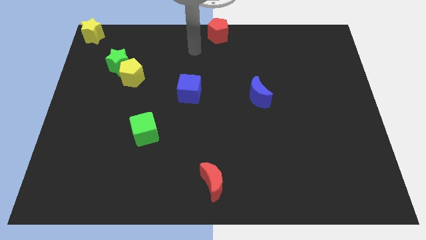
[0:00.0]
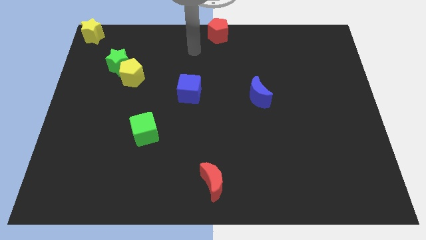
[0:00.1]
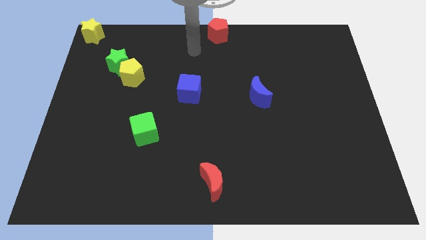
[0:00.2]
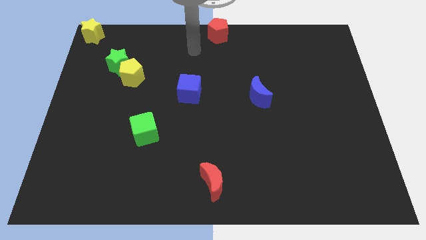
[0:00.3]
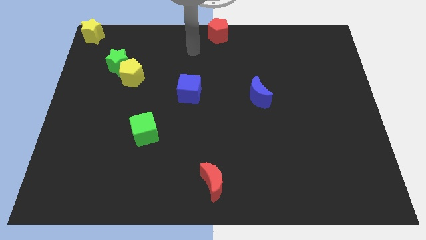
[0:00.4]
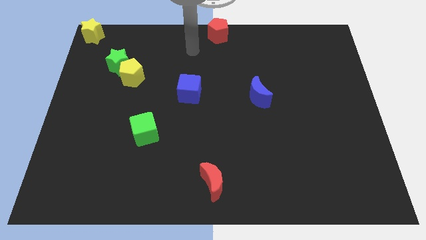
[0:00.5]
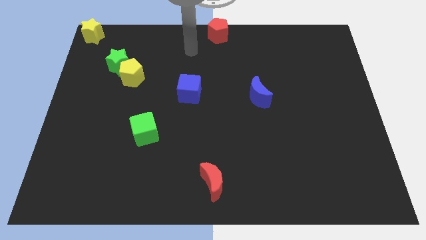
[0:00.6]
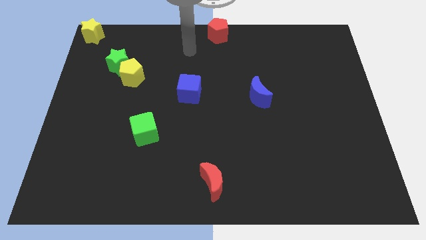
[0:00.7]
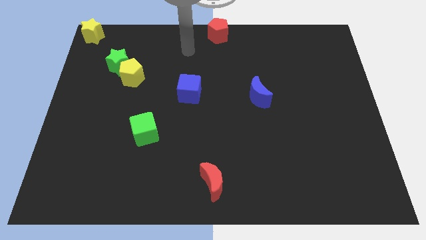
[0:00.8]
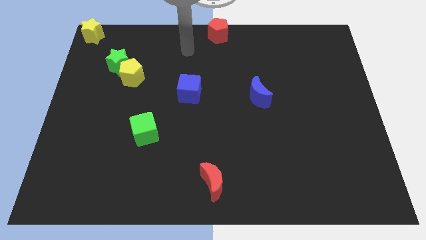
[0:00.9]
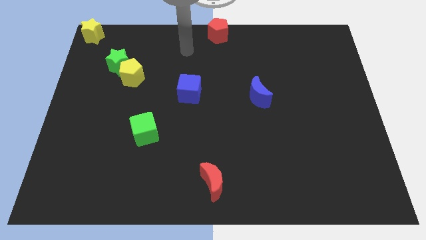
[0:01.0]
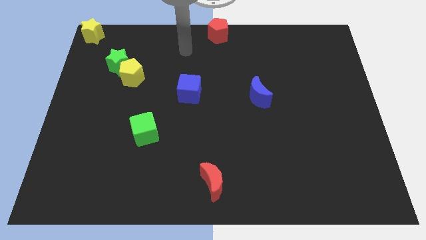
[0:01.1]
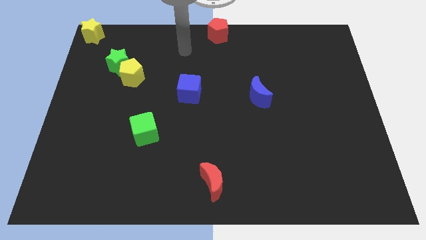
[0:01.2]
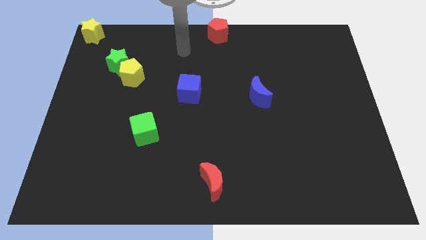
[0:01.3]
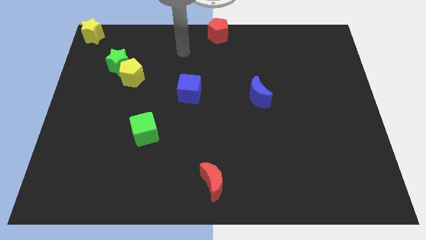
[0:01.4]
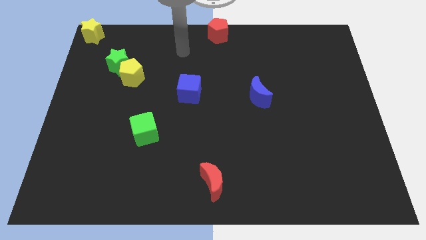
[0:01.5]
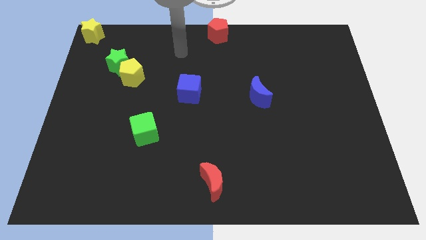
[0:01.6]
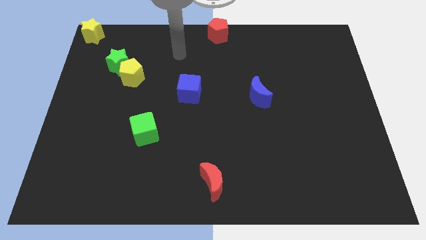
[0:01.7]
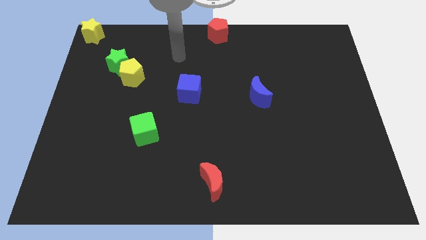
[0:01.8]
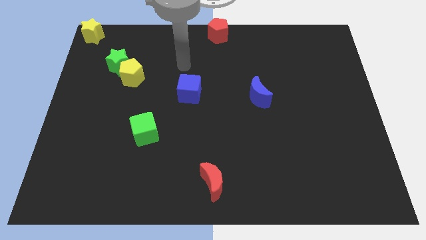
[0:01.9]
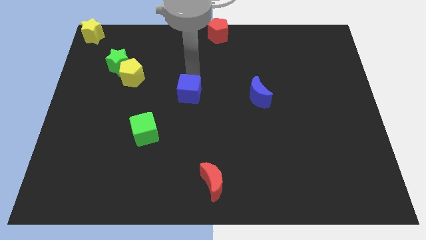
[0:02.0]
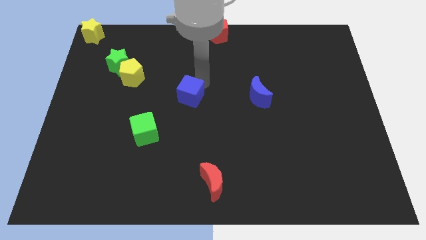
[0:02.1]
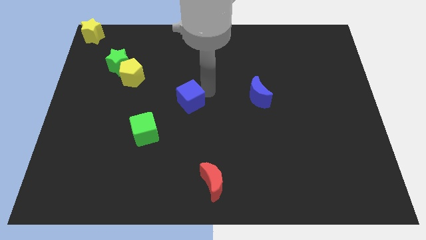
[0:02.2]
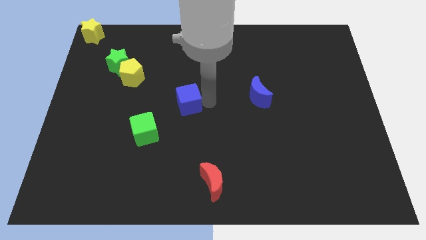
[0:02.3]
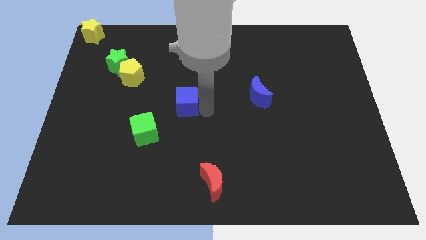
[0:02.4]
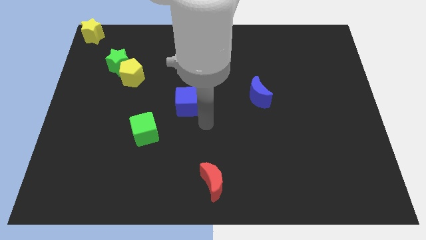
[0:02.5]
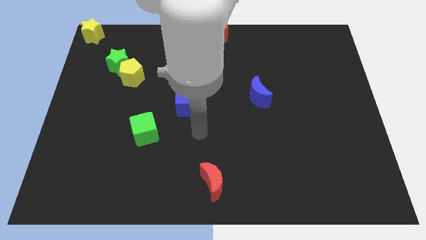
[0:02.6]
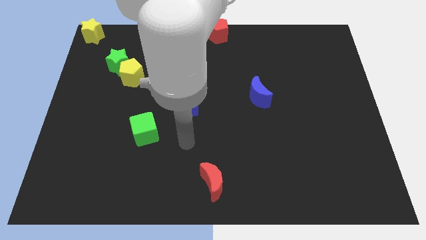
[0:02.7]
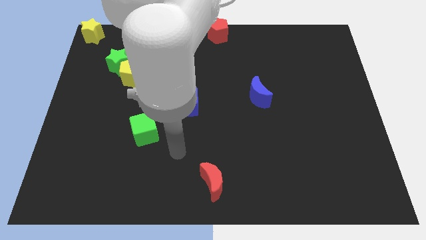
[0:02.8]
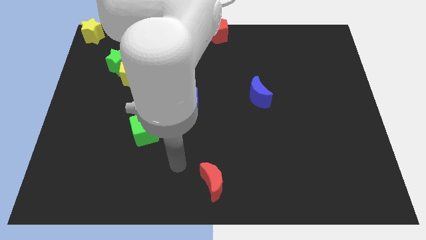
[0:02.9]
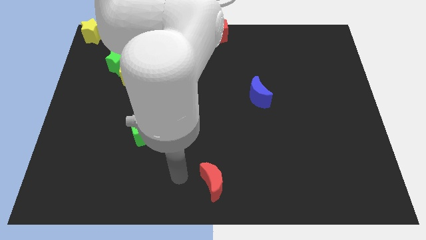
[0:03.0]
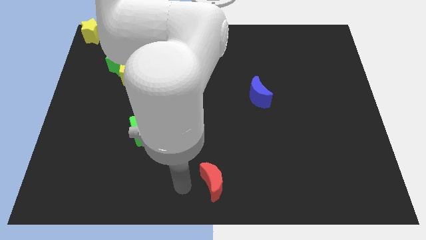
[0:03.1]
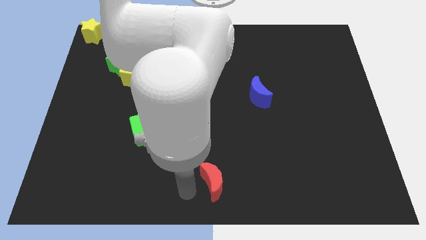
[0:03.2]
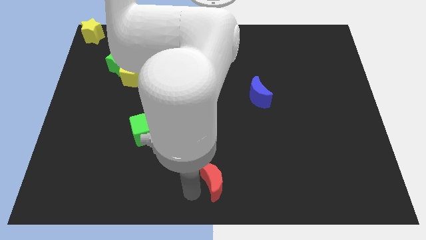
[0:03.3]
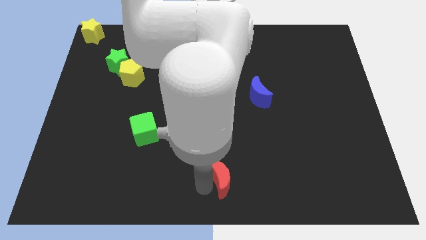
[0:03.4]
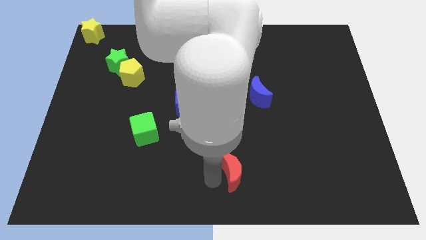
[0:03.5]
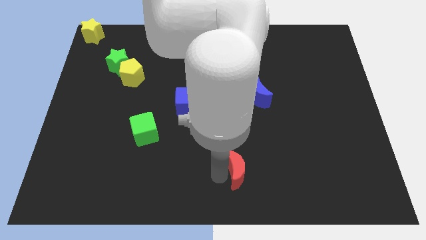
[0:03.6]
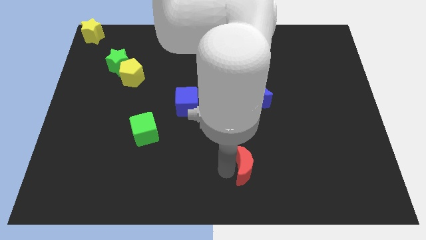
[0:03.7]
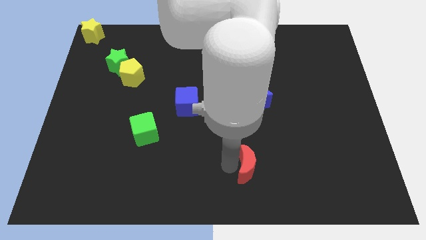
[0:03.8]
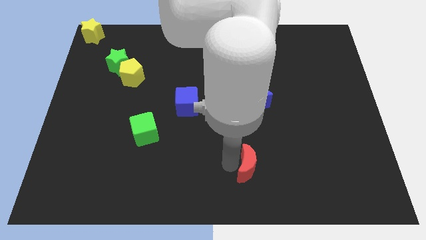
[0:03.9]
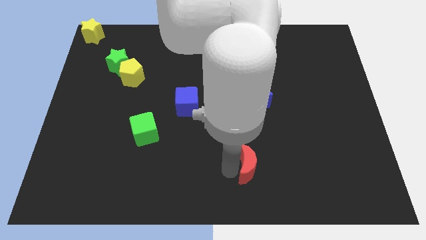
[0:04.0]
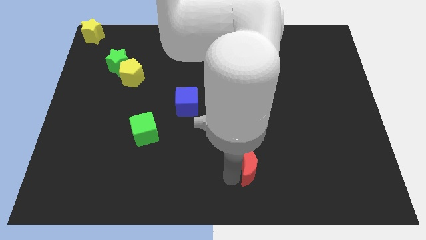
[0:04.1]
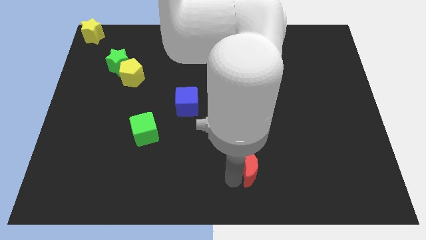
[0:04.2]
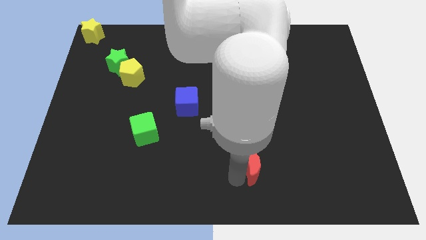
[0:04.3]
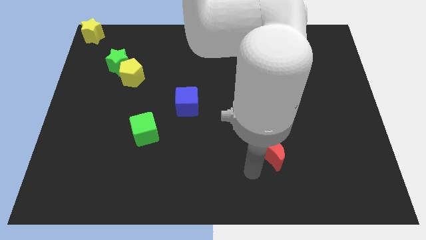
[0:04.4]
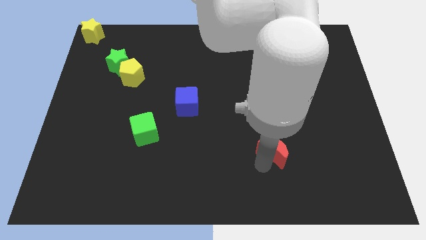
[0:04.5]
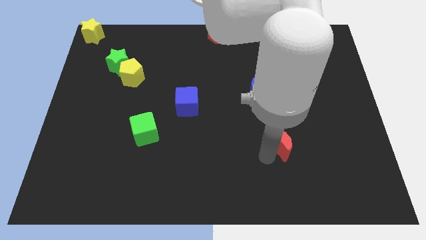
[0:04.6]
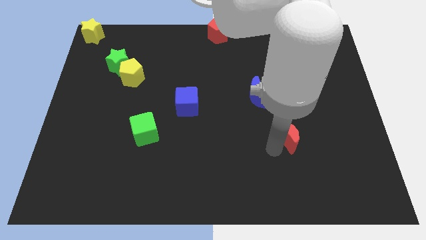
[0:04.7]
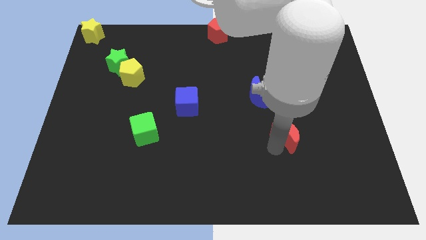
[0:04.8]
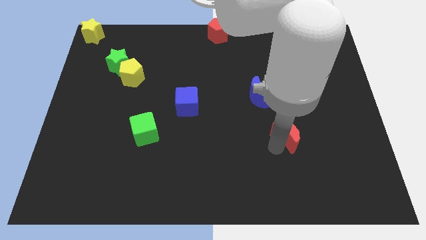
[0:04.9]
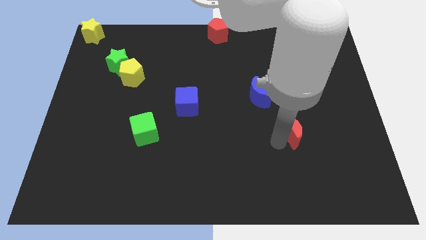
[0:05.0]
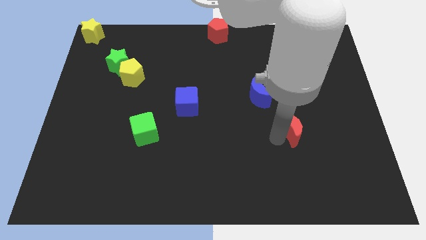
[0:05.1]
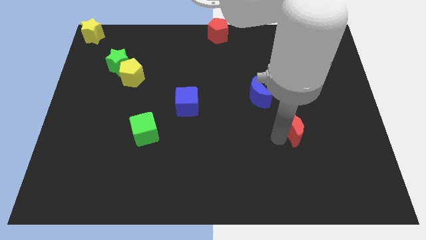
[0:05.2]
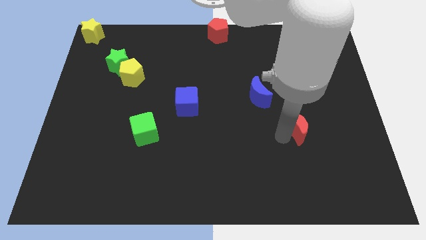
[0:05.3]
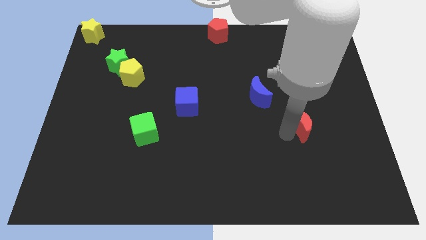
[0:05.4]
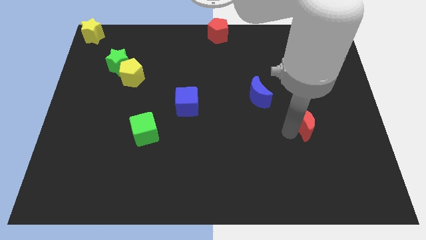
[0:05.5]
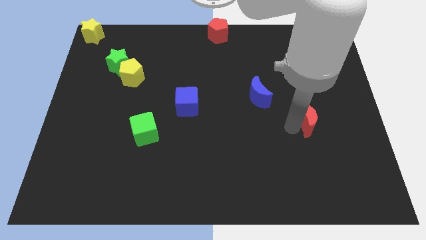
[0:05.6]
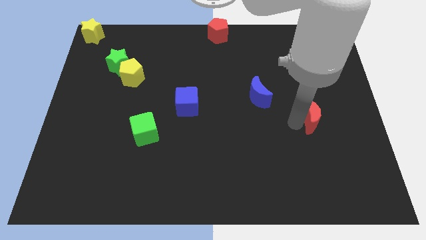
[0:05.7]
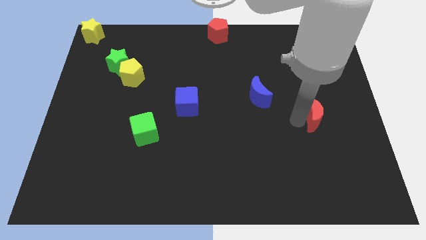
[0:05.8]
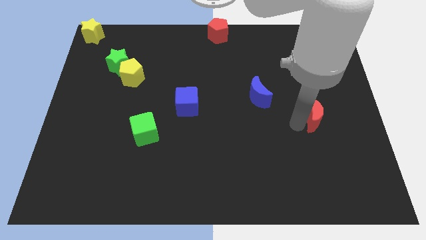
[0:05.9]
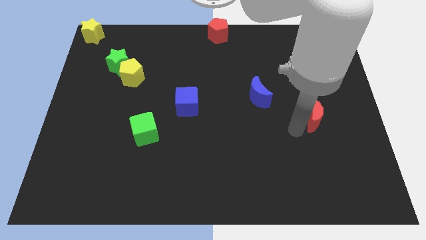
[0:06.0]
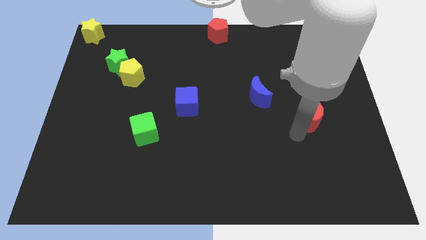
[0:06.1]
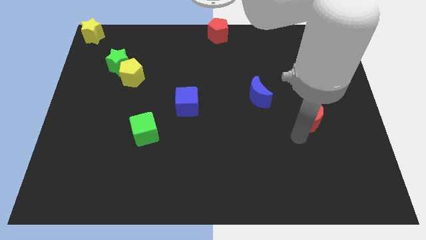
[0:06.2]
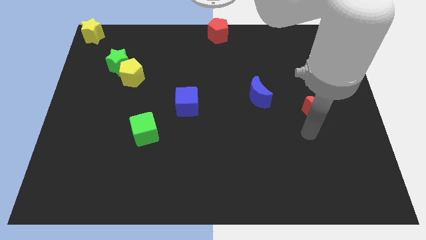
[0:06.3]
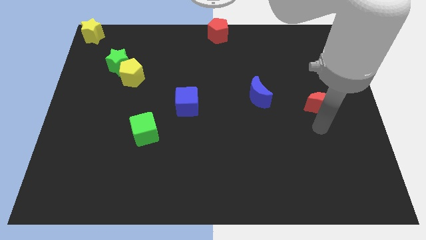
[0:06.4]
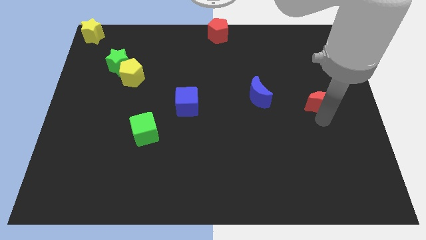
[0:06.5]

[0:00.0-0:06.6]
put the red crescent towards the right side of the blue crescent

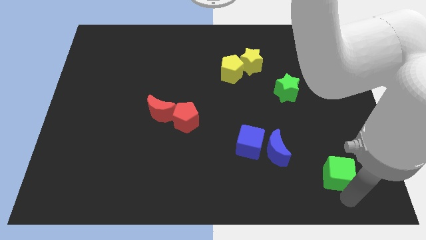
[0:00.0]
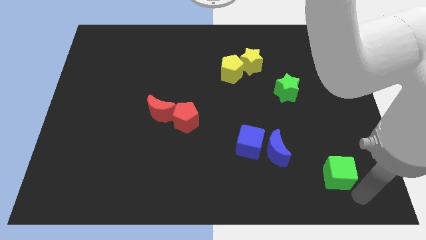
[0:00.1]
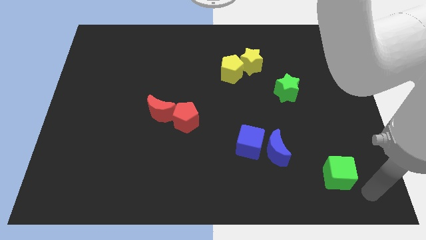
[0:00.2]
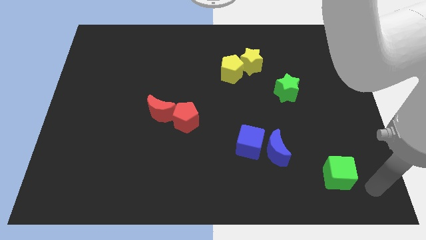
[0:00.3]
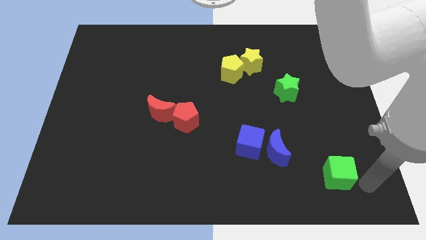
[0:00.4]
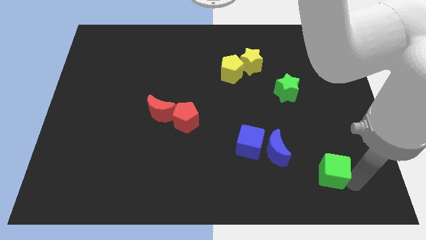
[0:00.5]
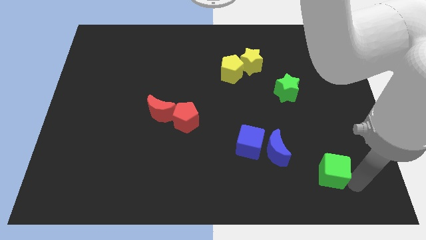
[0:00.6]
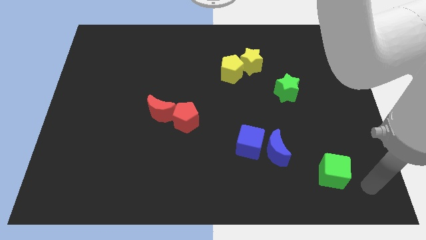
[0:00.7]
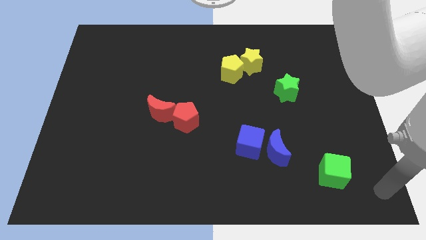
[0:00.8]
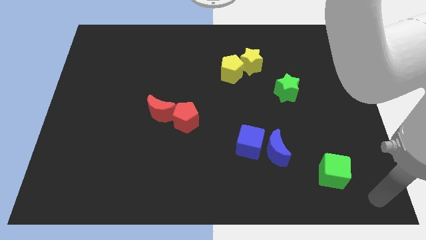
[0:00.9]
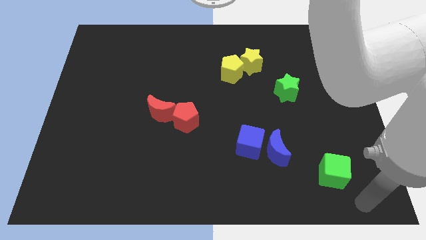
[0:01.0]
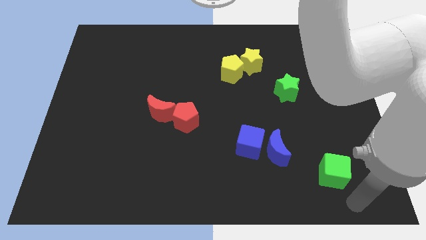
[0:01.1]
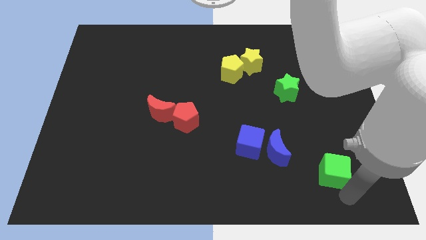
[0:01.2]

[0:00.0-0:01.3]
place the green cube diagonally bottom right of the blue crescent

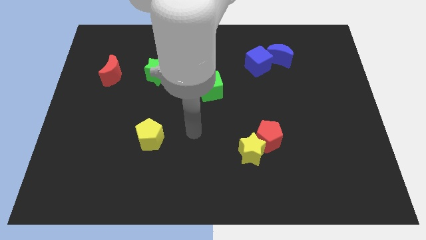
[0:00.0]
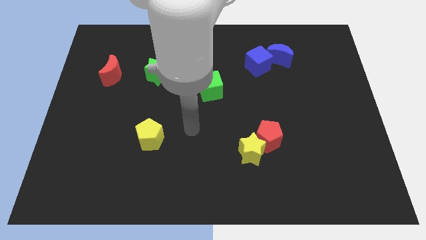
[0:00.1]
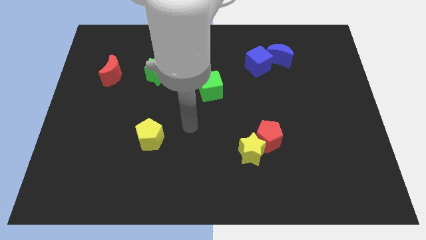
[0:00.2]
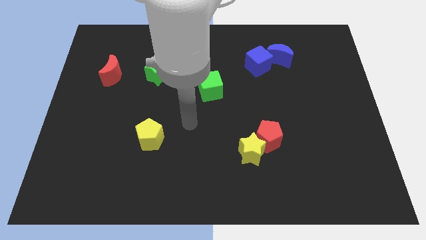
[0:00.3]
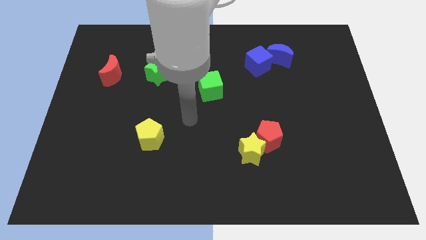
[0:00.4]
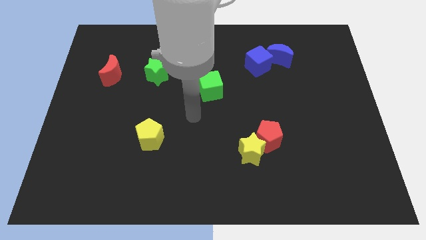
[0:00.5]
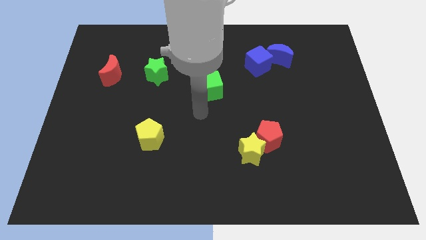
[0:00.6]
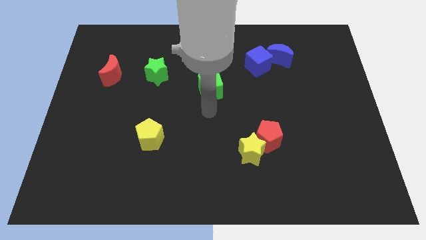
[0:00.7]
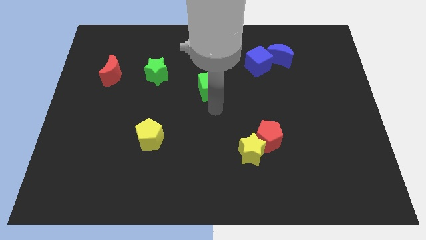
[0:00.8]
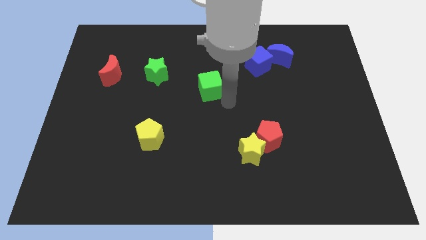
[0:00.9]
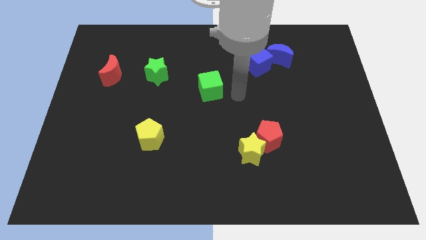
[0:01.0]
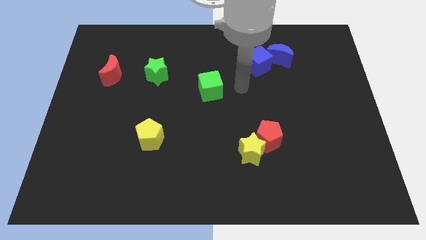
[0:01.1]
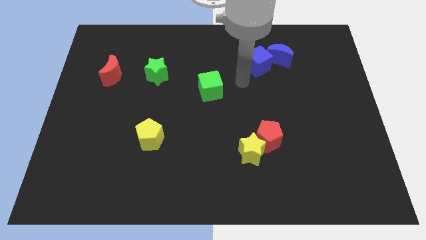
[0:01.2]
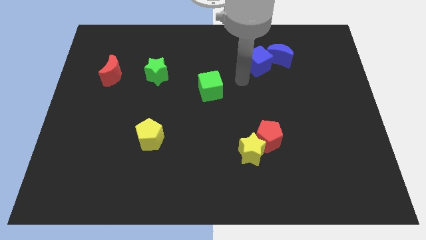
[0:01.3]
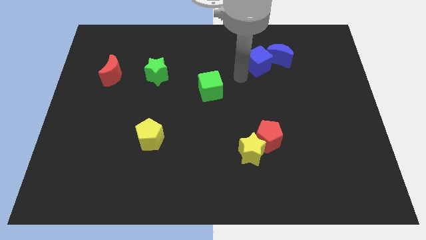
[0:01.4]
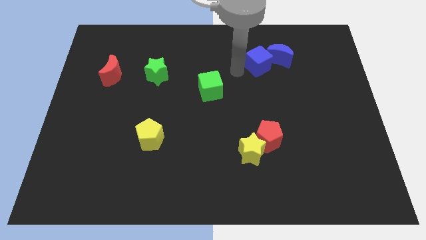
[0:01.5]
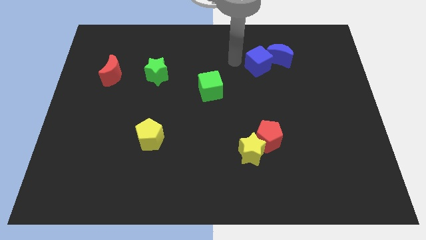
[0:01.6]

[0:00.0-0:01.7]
move arm near blue cube
